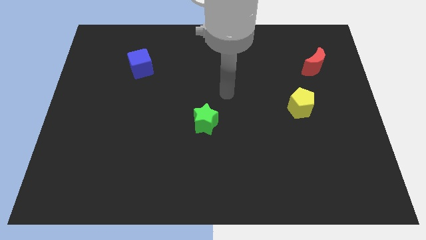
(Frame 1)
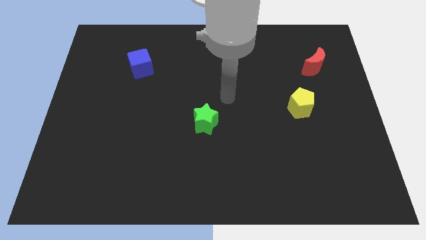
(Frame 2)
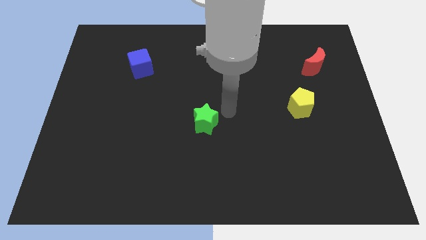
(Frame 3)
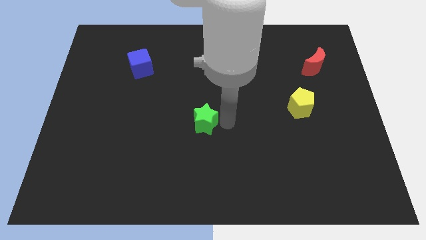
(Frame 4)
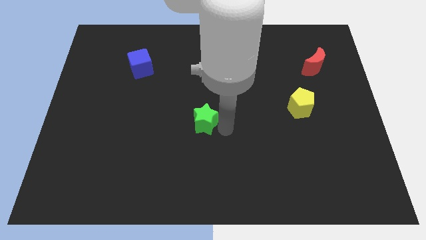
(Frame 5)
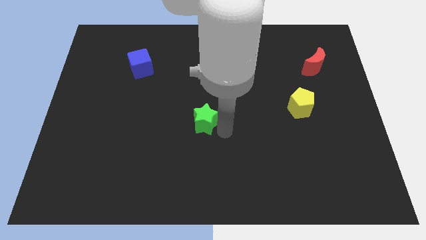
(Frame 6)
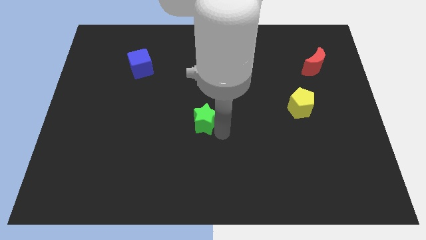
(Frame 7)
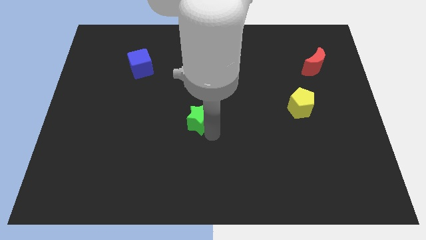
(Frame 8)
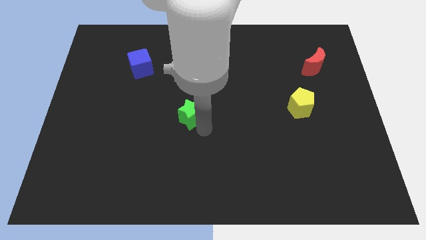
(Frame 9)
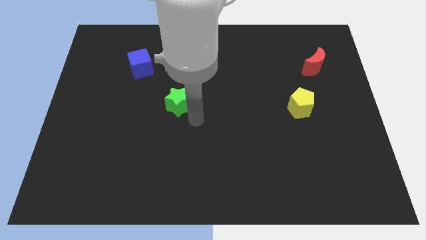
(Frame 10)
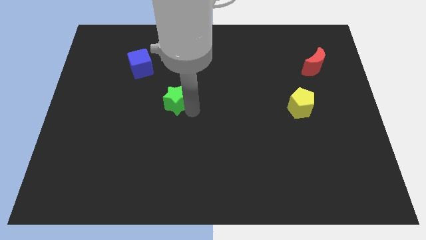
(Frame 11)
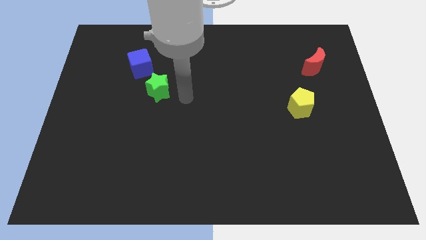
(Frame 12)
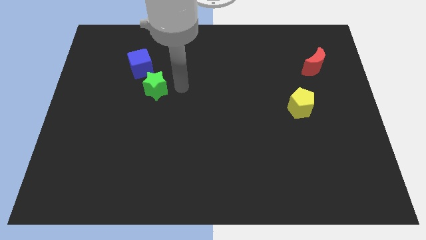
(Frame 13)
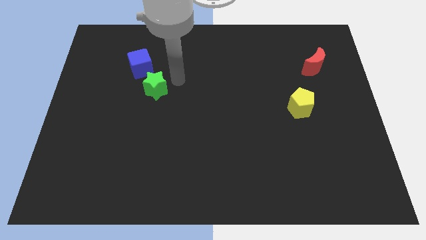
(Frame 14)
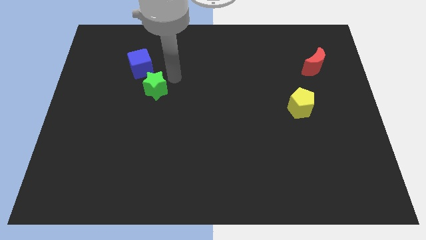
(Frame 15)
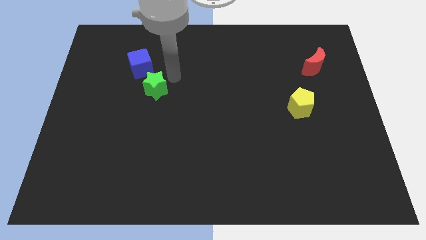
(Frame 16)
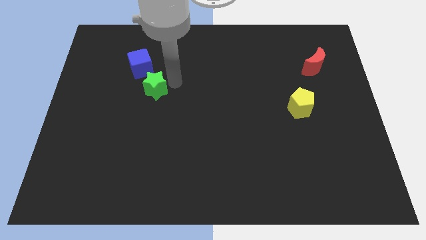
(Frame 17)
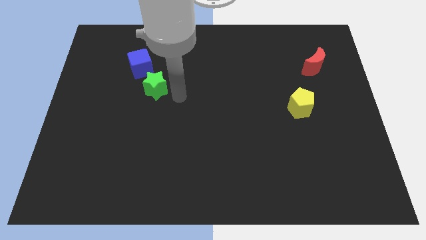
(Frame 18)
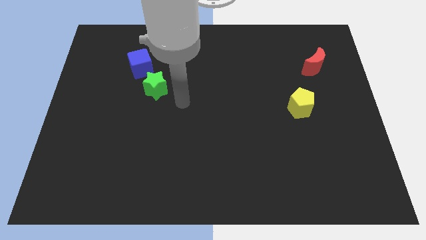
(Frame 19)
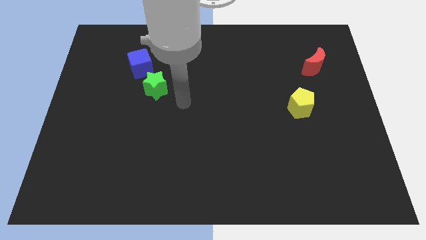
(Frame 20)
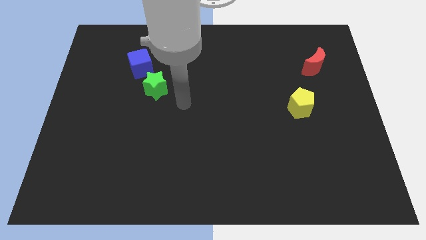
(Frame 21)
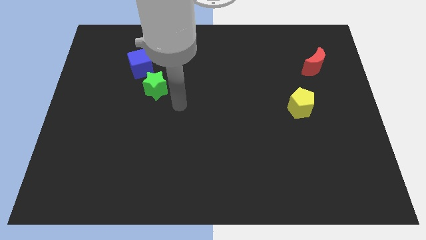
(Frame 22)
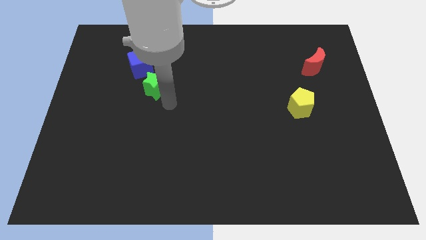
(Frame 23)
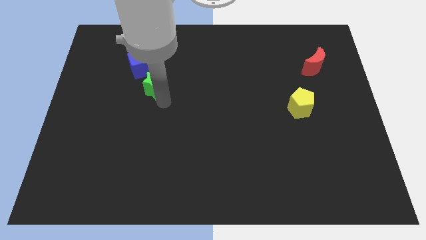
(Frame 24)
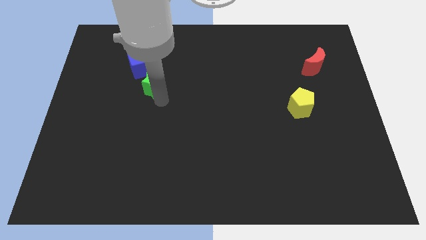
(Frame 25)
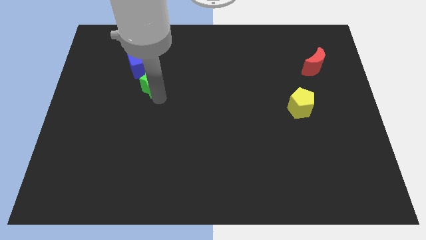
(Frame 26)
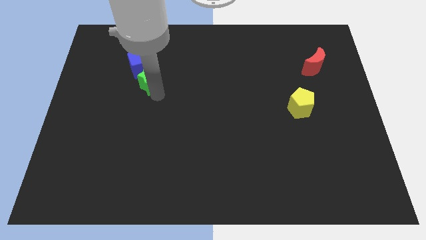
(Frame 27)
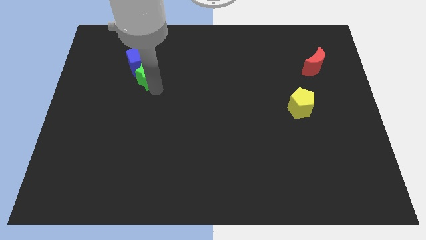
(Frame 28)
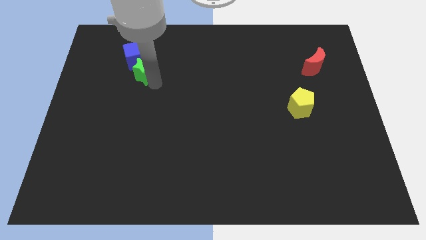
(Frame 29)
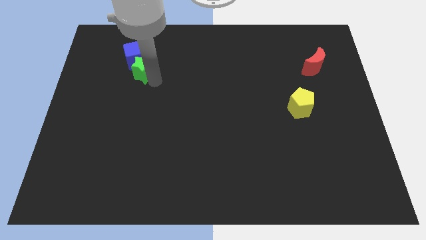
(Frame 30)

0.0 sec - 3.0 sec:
move the star next to the blue block

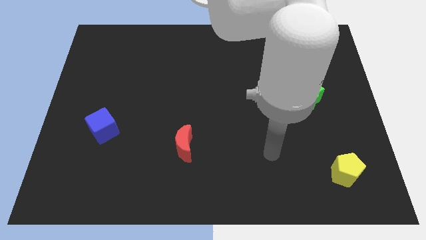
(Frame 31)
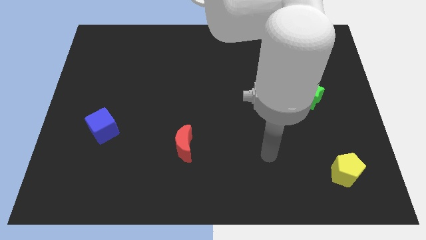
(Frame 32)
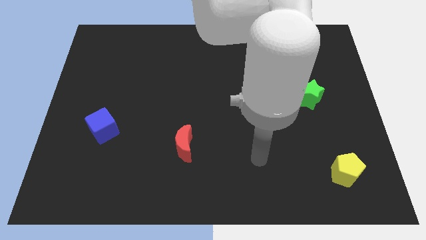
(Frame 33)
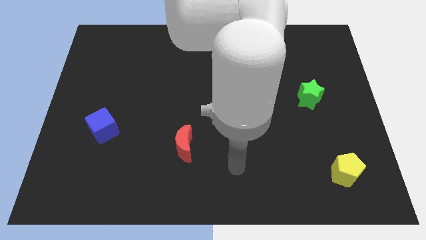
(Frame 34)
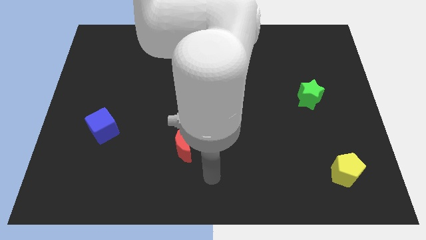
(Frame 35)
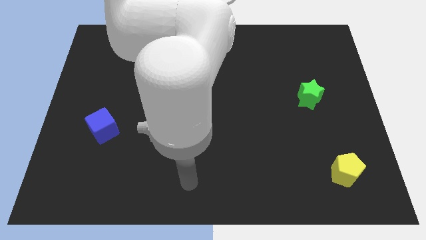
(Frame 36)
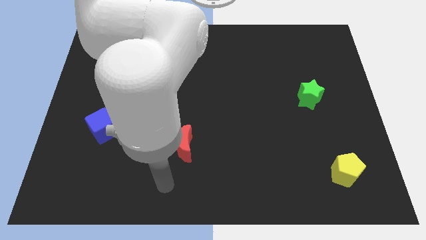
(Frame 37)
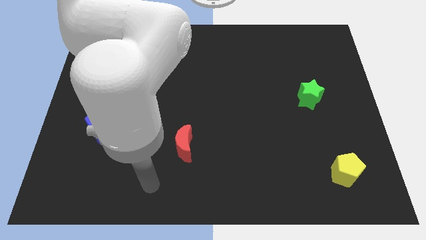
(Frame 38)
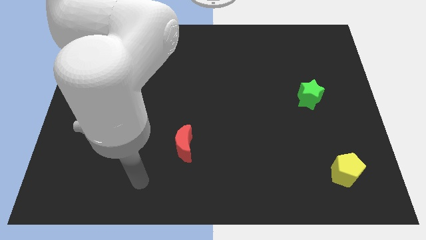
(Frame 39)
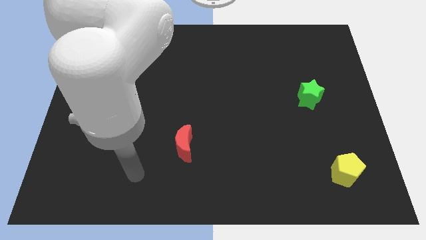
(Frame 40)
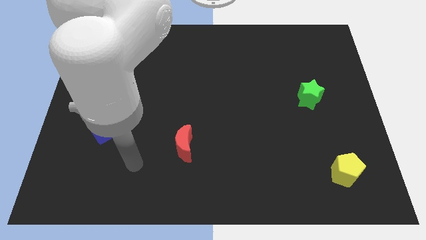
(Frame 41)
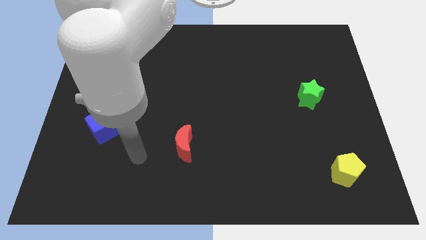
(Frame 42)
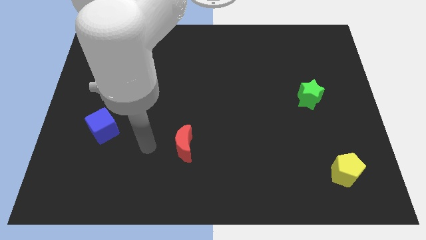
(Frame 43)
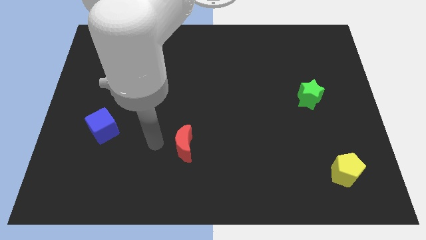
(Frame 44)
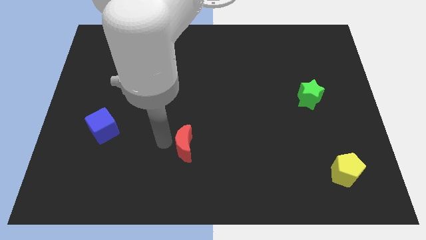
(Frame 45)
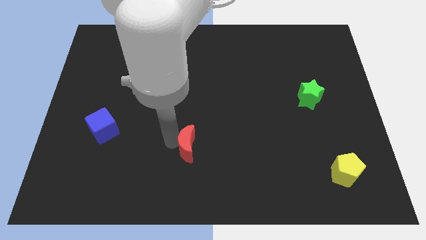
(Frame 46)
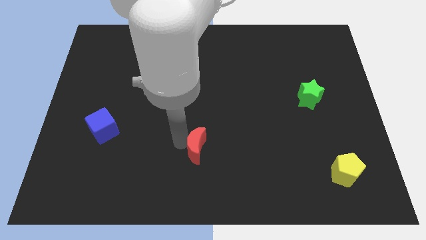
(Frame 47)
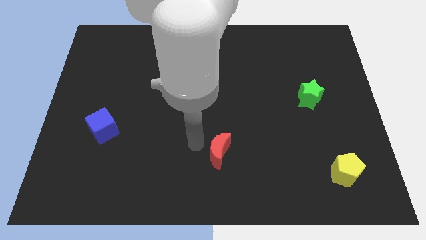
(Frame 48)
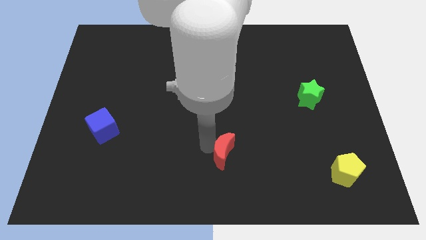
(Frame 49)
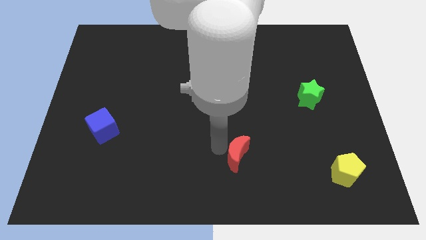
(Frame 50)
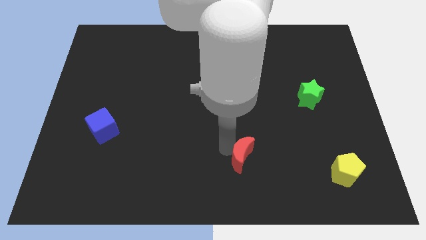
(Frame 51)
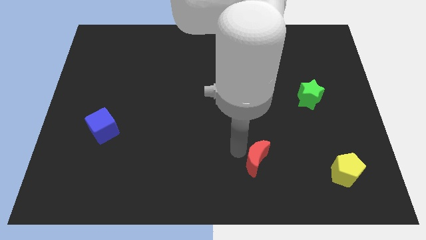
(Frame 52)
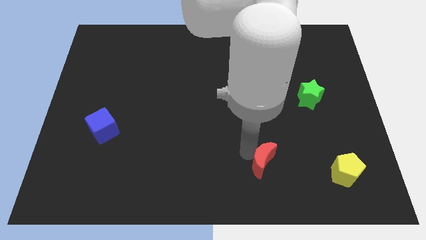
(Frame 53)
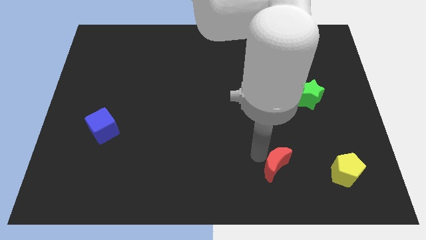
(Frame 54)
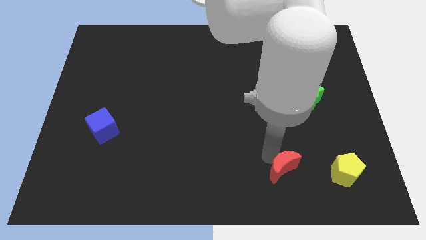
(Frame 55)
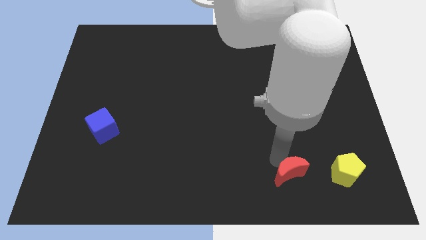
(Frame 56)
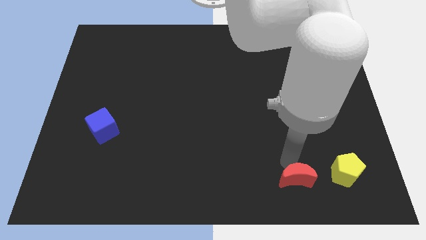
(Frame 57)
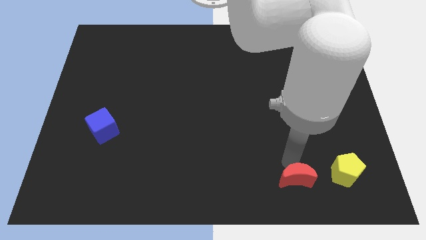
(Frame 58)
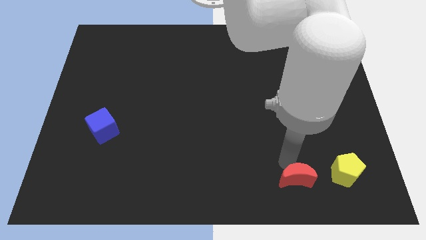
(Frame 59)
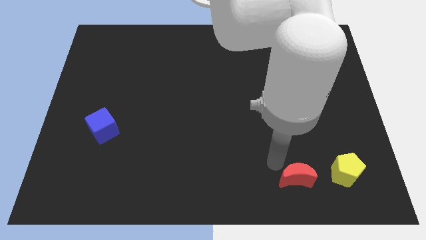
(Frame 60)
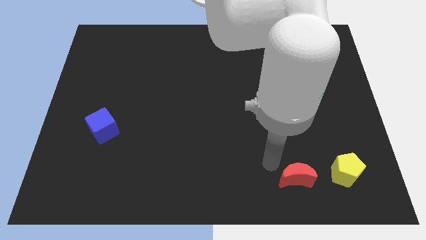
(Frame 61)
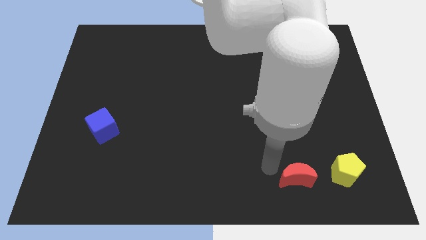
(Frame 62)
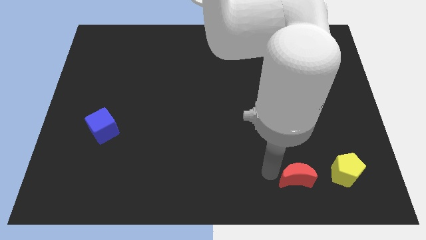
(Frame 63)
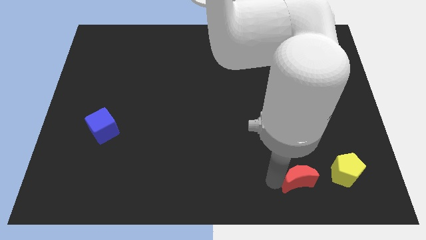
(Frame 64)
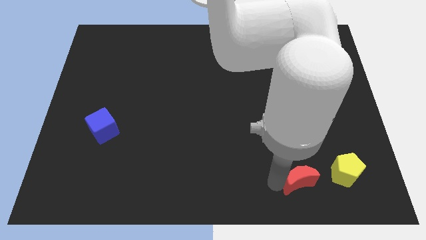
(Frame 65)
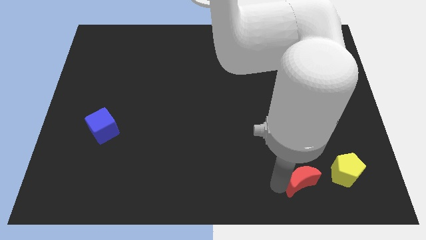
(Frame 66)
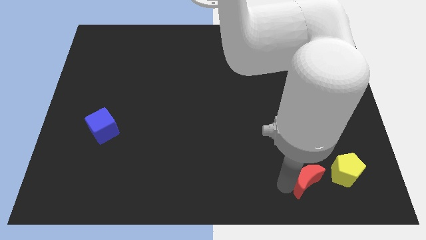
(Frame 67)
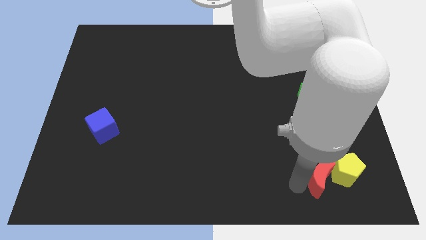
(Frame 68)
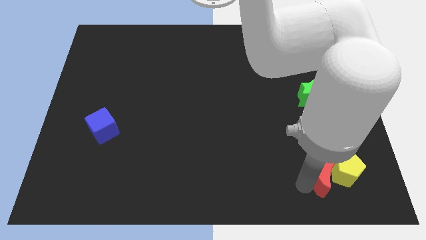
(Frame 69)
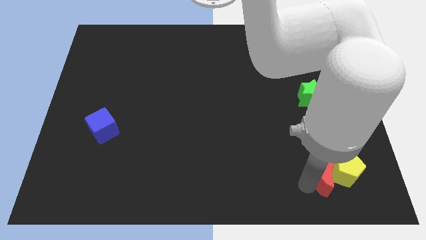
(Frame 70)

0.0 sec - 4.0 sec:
push the moon close to the yellow pentagon

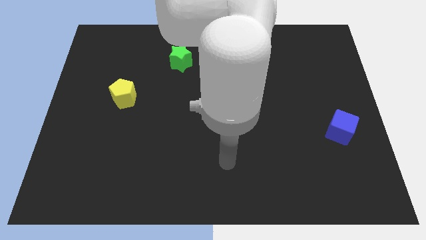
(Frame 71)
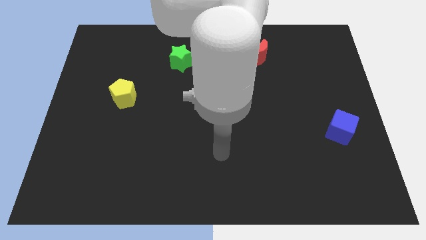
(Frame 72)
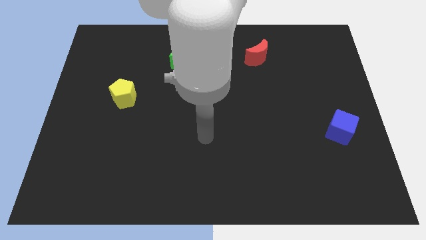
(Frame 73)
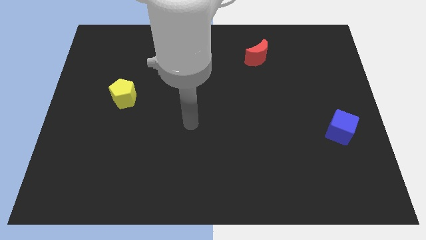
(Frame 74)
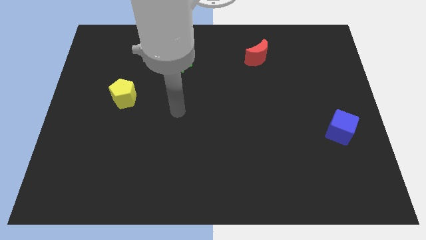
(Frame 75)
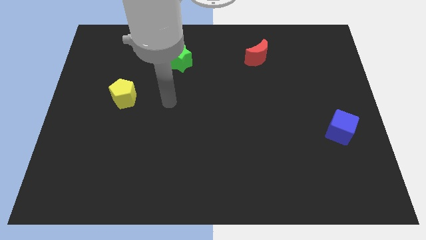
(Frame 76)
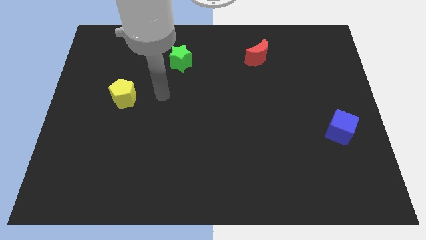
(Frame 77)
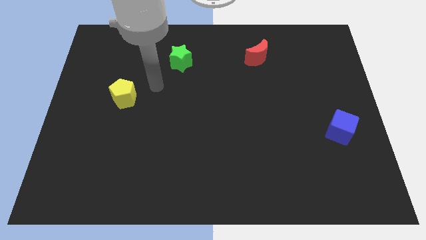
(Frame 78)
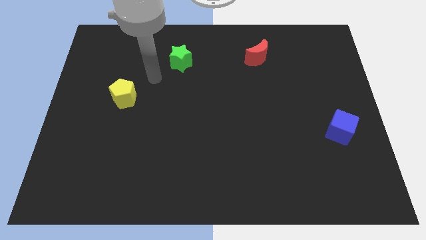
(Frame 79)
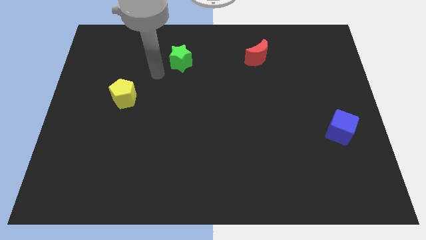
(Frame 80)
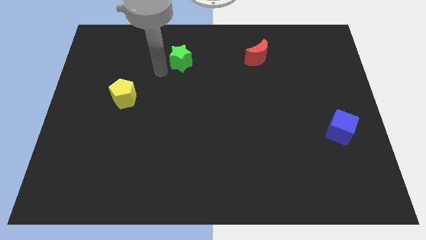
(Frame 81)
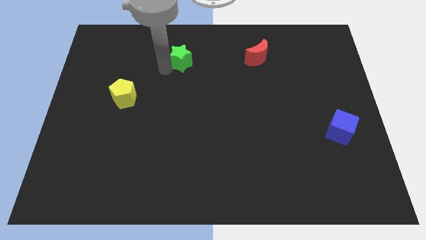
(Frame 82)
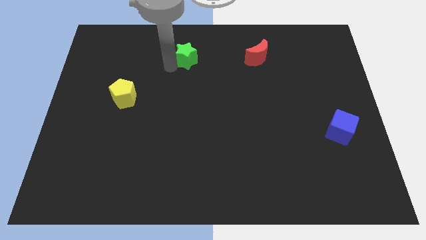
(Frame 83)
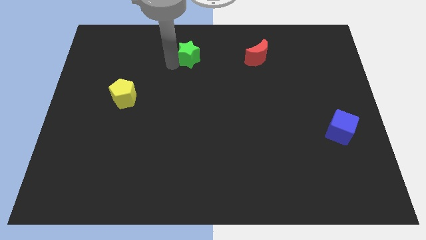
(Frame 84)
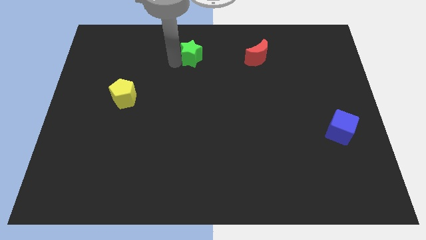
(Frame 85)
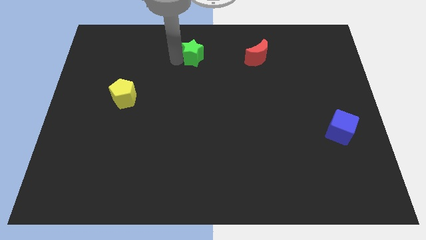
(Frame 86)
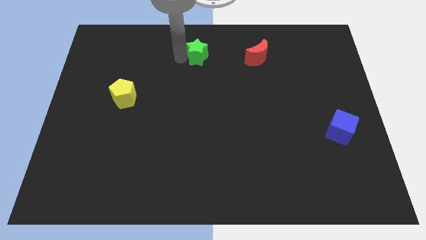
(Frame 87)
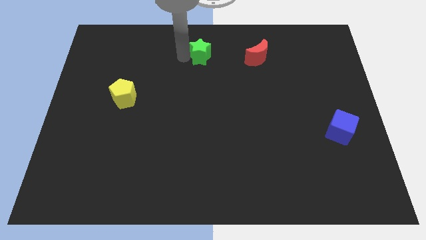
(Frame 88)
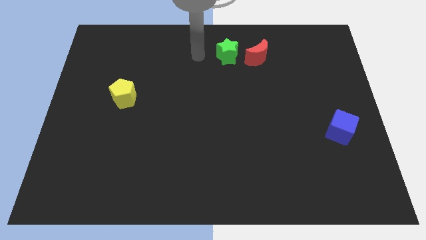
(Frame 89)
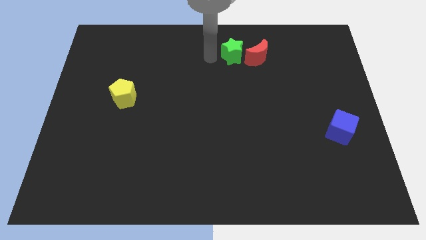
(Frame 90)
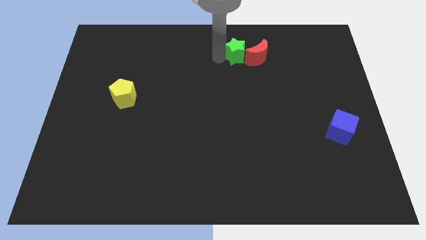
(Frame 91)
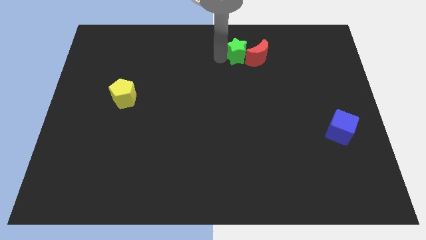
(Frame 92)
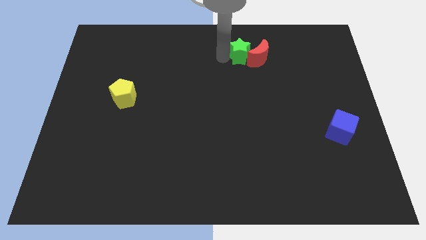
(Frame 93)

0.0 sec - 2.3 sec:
slide the green block close to the red moon
